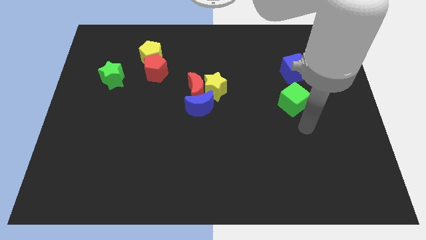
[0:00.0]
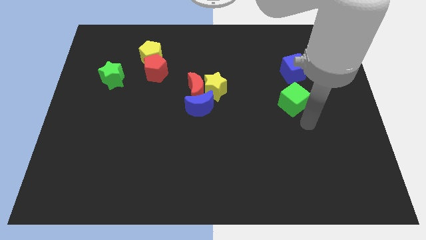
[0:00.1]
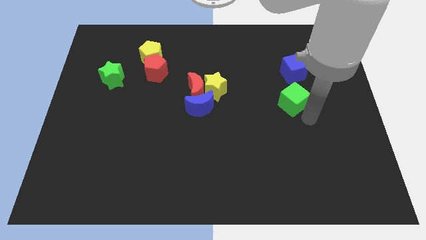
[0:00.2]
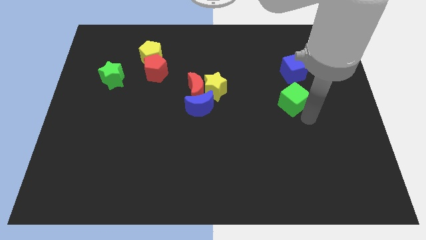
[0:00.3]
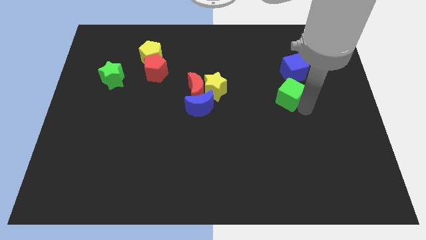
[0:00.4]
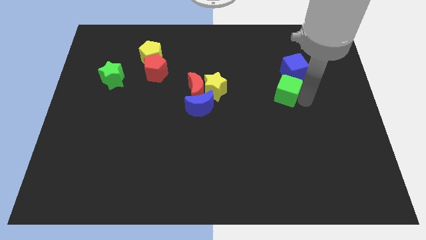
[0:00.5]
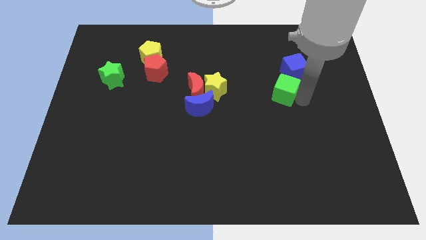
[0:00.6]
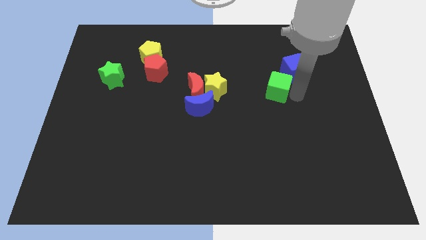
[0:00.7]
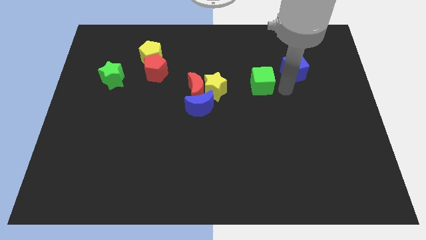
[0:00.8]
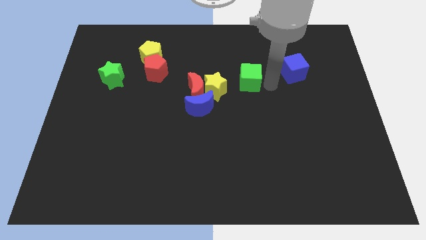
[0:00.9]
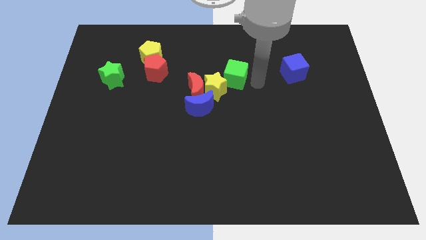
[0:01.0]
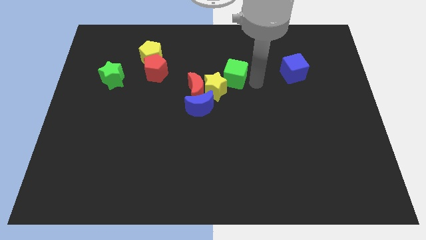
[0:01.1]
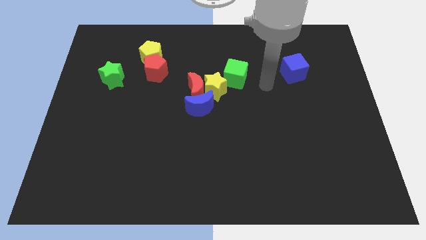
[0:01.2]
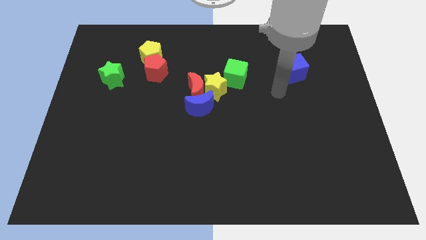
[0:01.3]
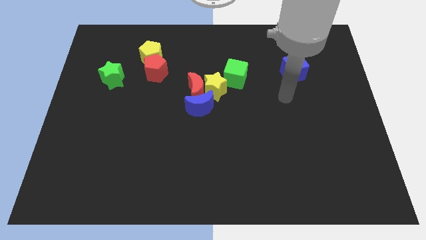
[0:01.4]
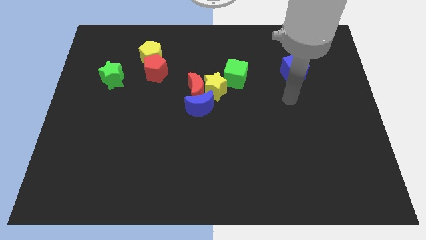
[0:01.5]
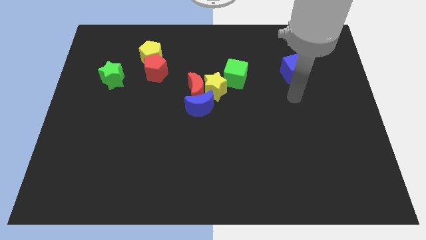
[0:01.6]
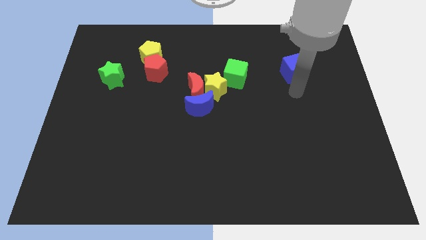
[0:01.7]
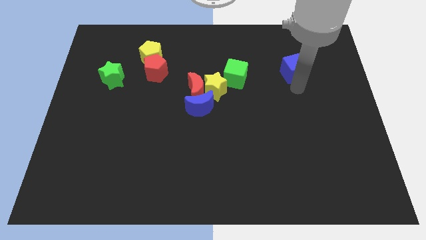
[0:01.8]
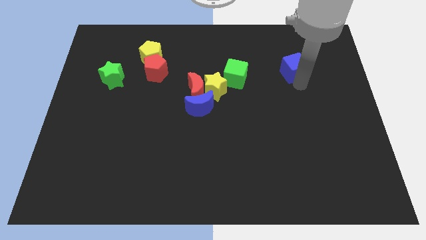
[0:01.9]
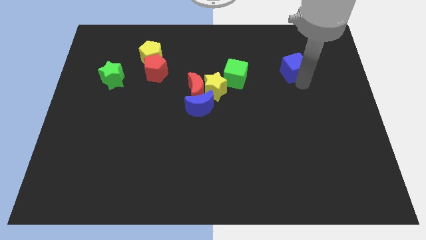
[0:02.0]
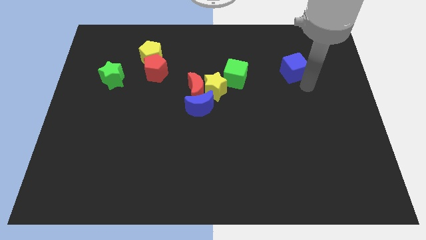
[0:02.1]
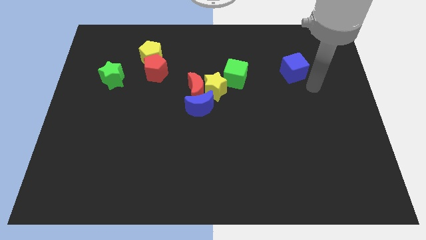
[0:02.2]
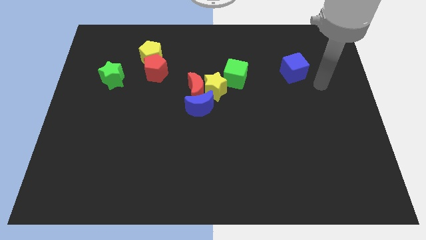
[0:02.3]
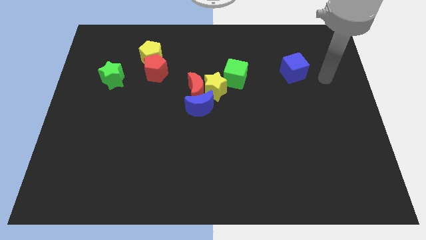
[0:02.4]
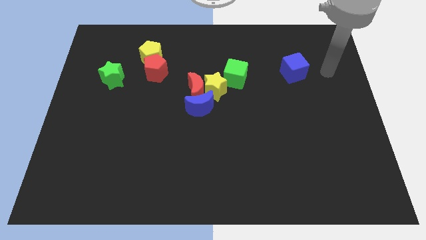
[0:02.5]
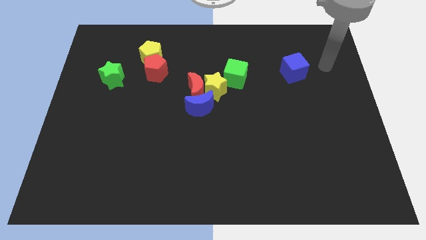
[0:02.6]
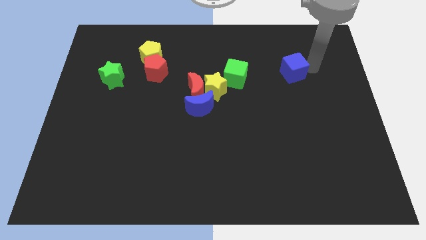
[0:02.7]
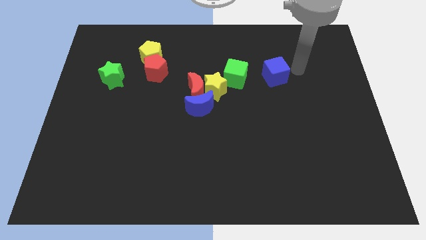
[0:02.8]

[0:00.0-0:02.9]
move green cube into group of stars

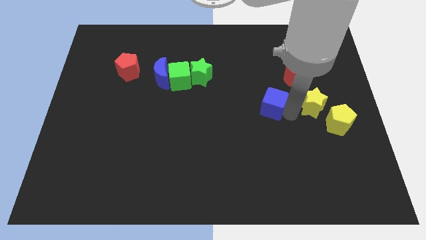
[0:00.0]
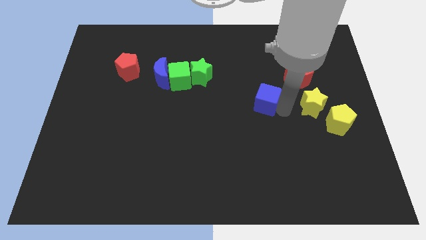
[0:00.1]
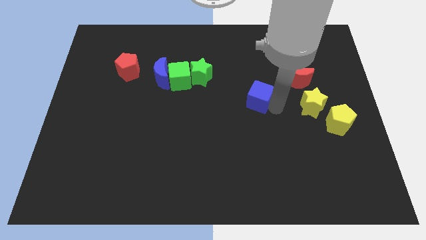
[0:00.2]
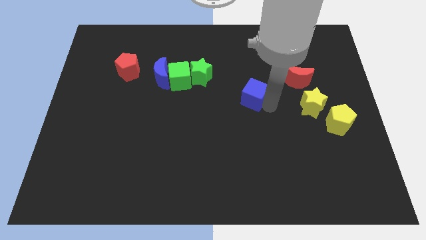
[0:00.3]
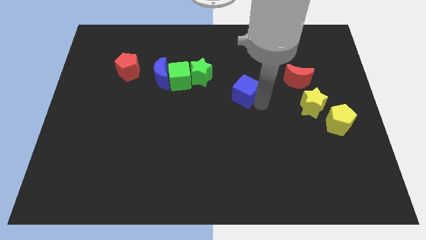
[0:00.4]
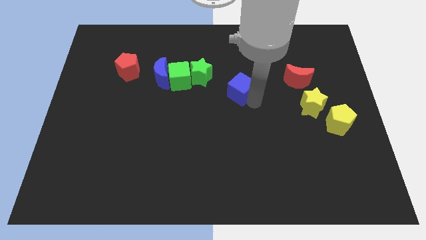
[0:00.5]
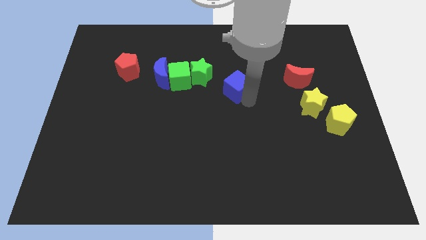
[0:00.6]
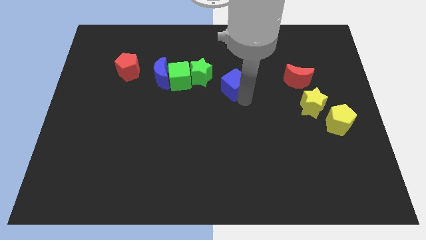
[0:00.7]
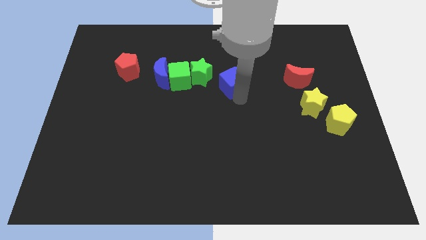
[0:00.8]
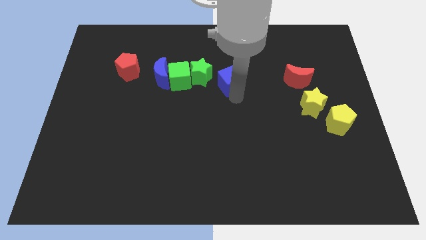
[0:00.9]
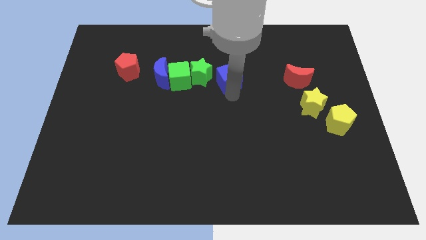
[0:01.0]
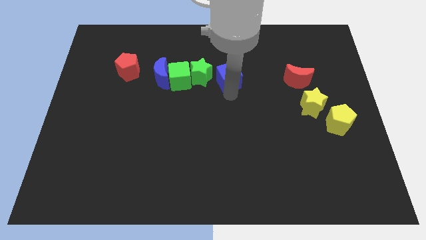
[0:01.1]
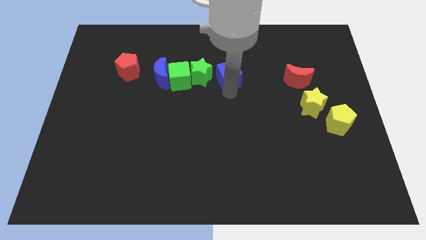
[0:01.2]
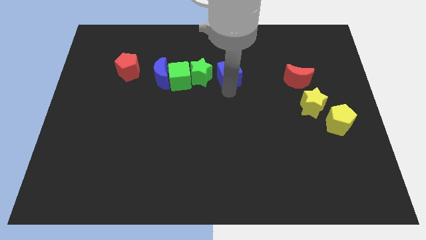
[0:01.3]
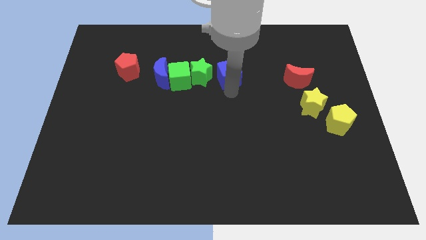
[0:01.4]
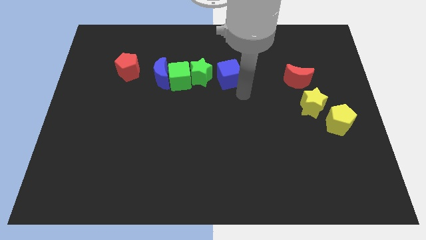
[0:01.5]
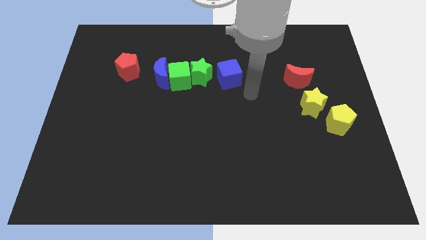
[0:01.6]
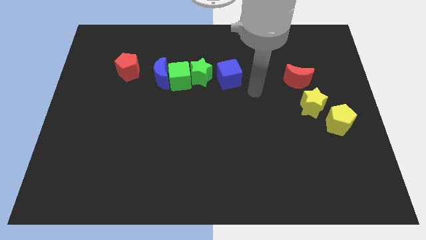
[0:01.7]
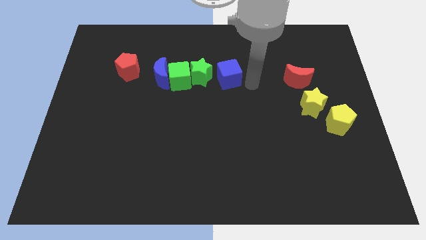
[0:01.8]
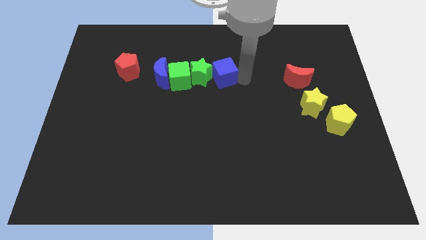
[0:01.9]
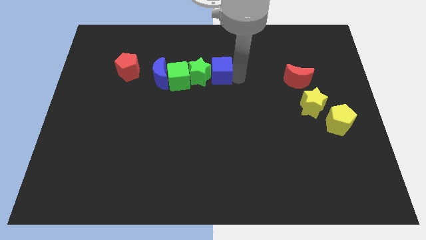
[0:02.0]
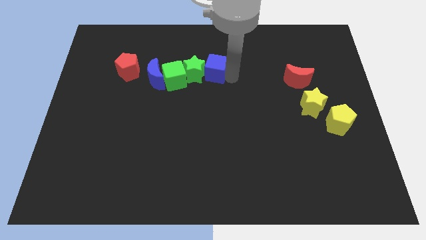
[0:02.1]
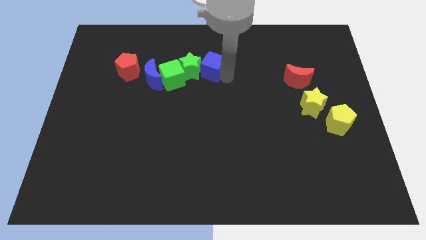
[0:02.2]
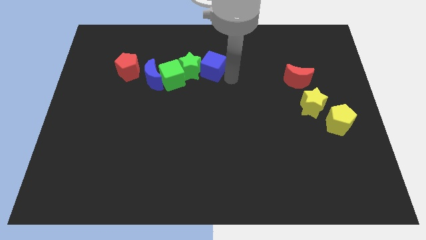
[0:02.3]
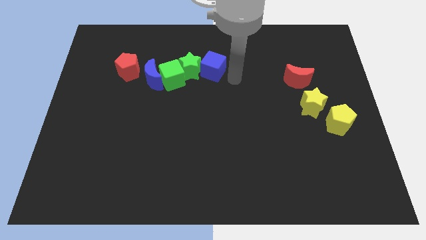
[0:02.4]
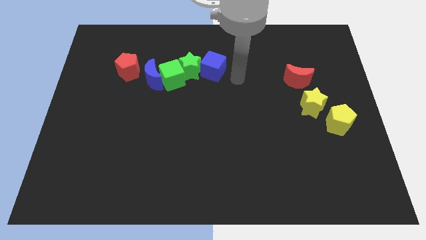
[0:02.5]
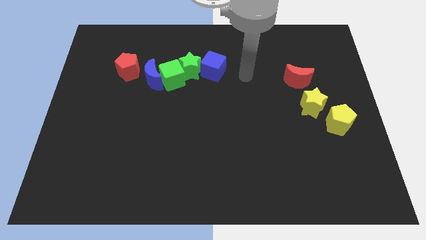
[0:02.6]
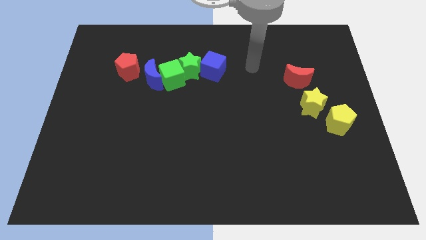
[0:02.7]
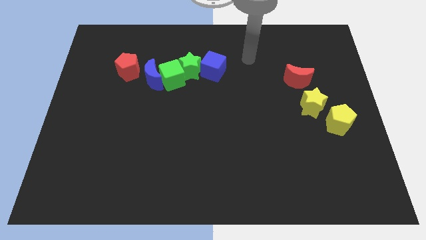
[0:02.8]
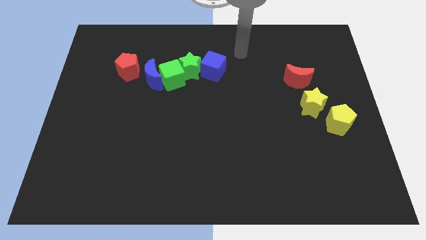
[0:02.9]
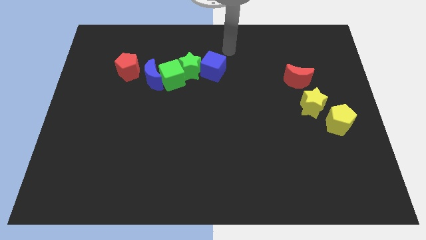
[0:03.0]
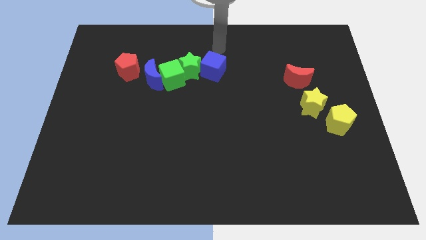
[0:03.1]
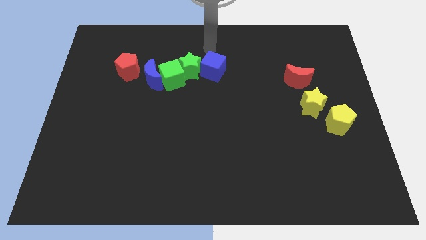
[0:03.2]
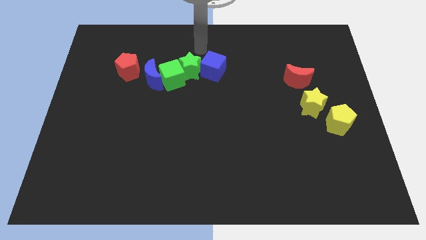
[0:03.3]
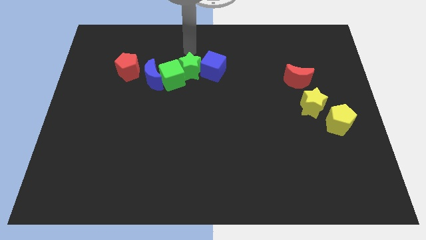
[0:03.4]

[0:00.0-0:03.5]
move blue cube into green star

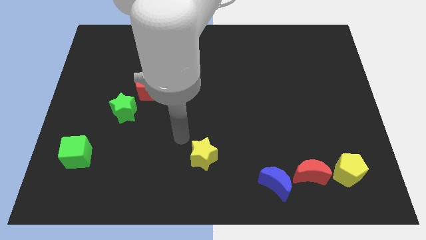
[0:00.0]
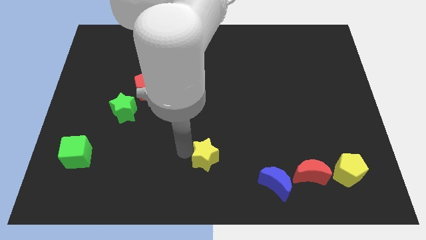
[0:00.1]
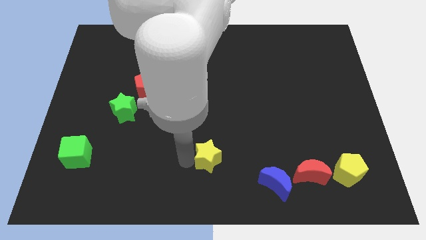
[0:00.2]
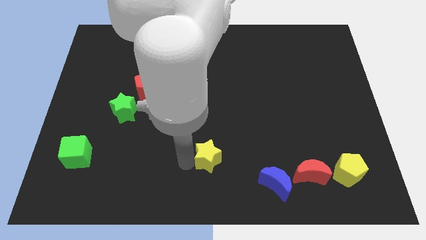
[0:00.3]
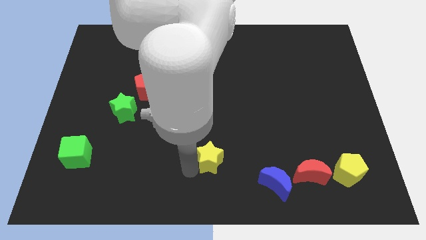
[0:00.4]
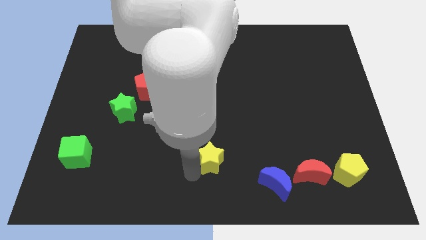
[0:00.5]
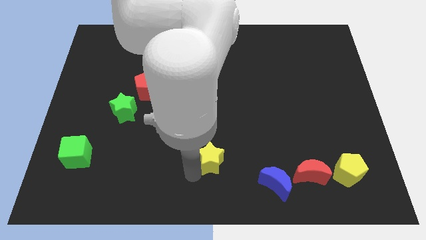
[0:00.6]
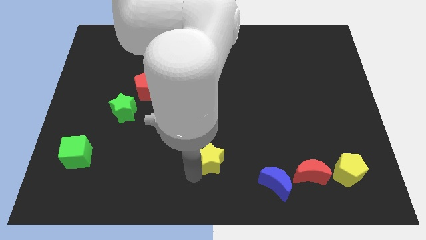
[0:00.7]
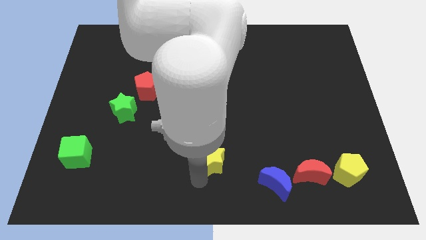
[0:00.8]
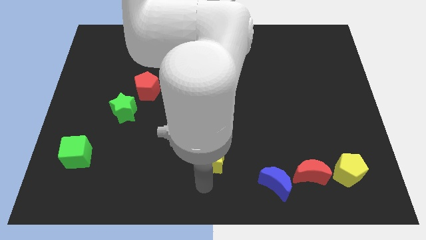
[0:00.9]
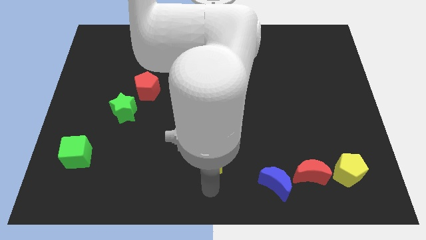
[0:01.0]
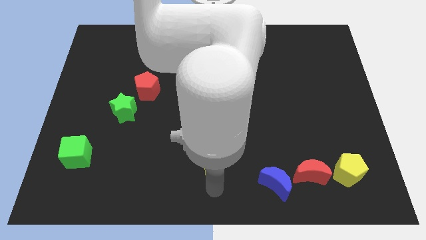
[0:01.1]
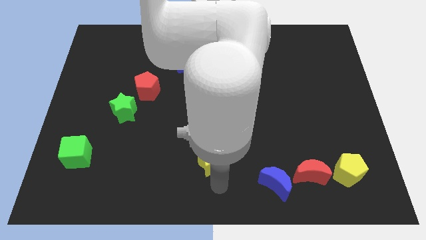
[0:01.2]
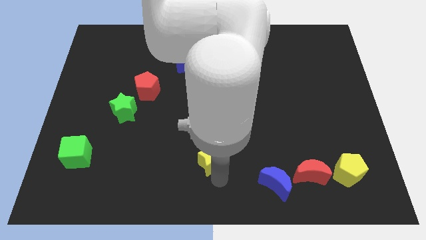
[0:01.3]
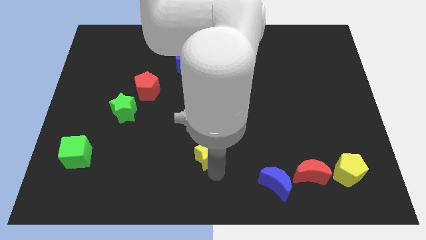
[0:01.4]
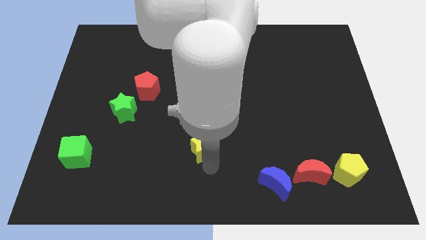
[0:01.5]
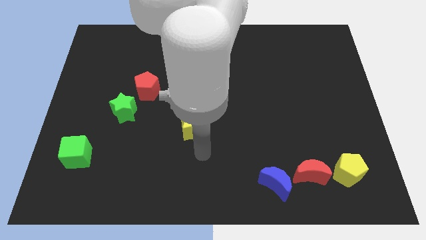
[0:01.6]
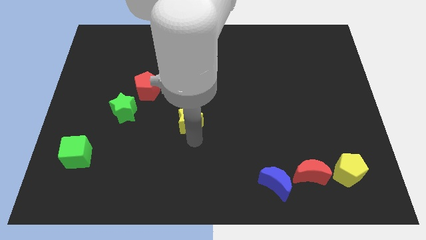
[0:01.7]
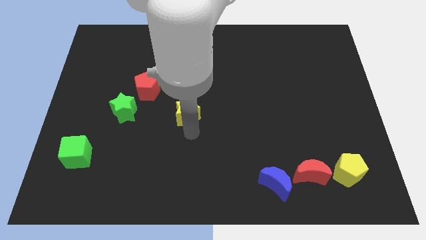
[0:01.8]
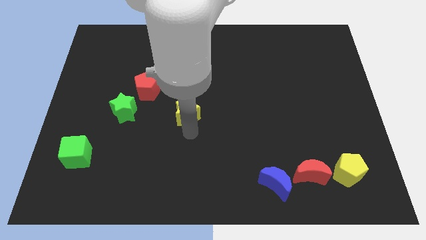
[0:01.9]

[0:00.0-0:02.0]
push yellow star upwards

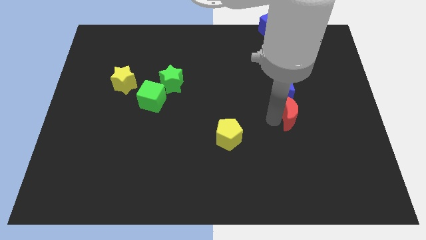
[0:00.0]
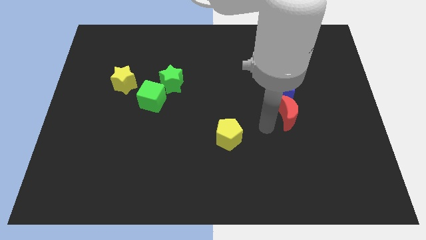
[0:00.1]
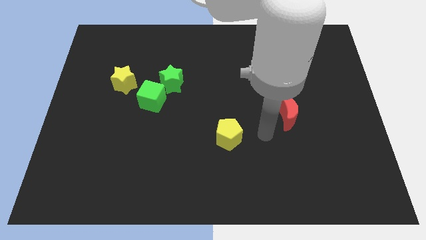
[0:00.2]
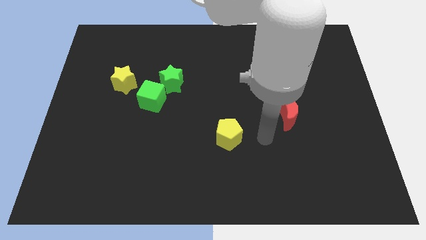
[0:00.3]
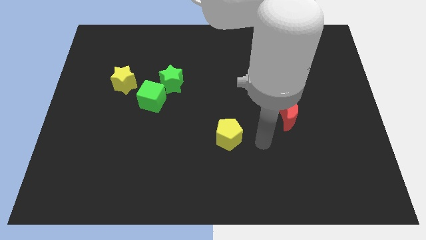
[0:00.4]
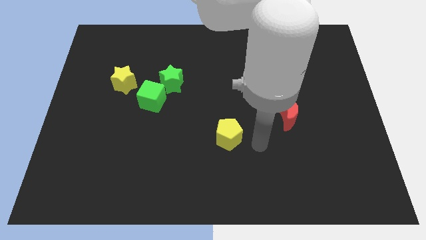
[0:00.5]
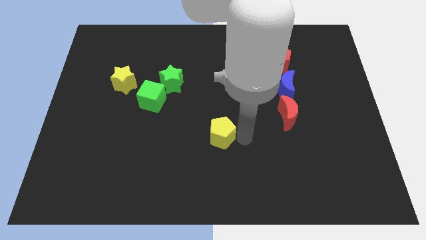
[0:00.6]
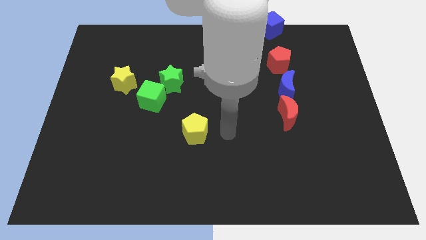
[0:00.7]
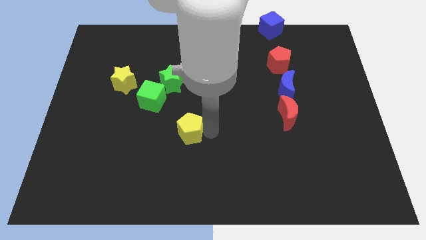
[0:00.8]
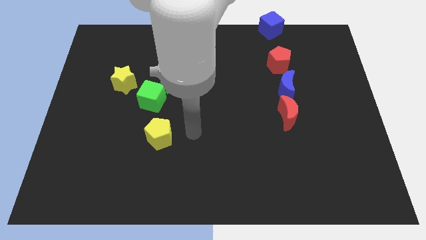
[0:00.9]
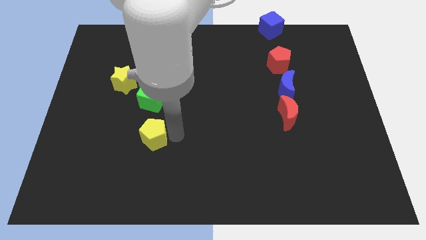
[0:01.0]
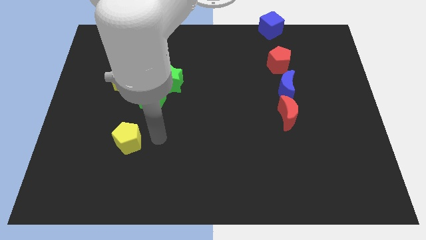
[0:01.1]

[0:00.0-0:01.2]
put the yellow pentagon below the green cube
